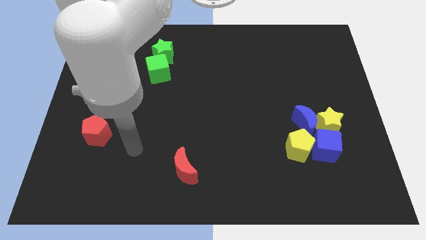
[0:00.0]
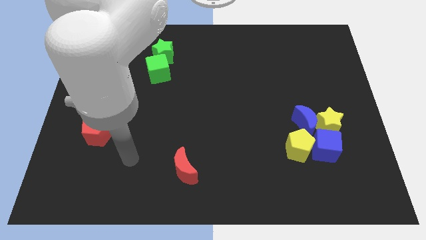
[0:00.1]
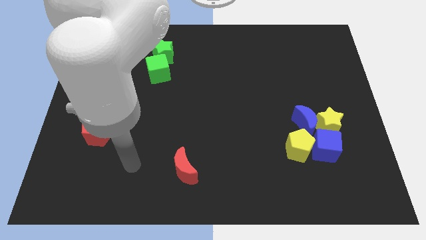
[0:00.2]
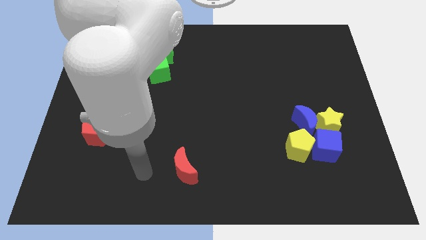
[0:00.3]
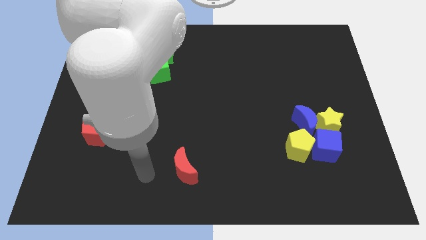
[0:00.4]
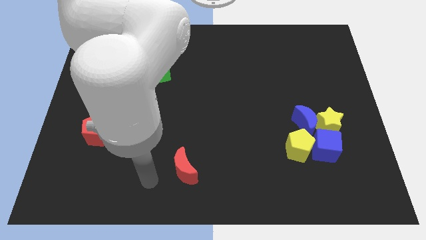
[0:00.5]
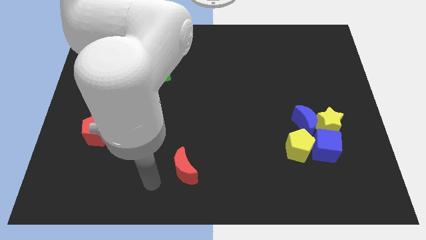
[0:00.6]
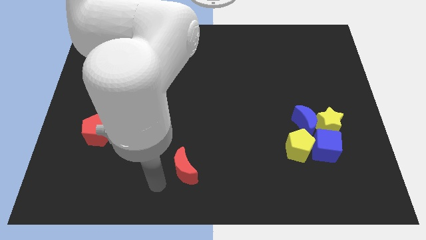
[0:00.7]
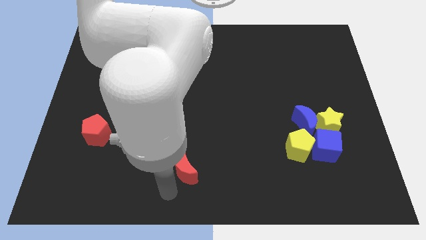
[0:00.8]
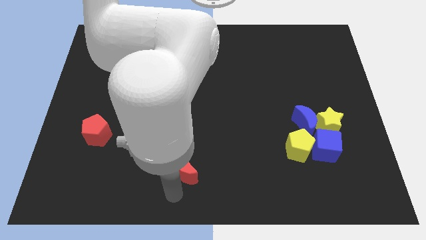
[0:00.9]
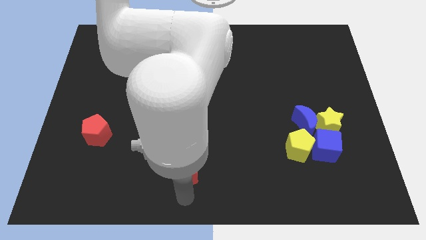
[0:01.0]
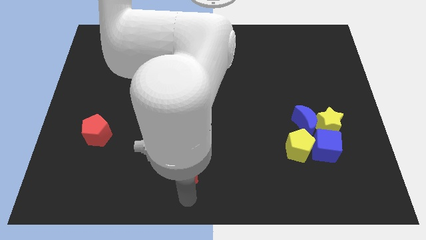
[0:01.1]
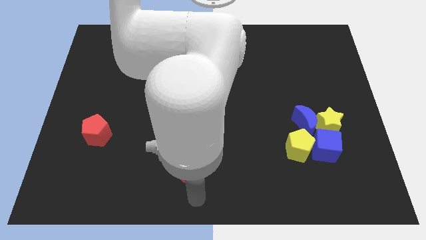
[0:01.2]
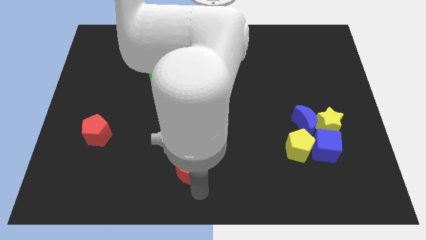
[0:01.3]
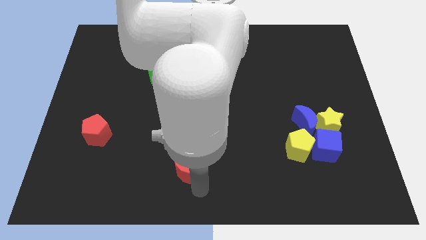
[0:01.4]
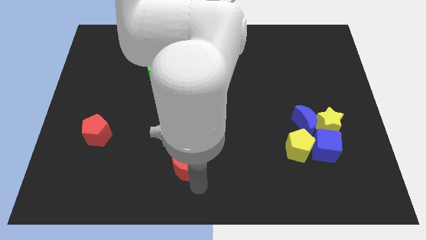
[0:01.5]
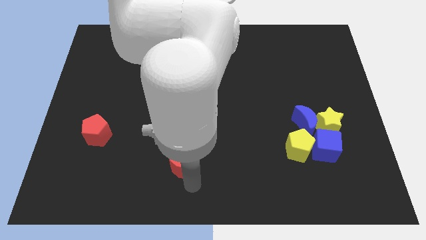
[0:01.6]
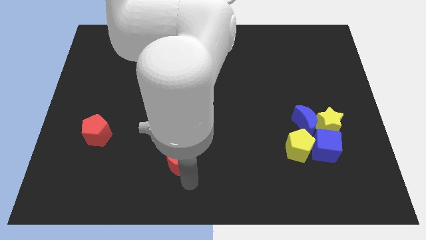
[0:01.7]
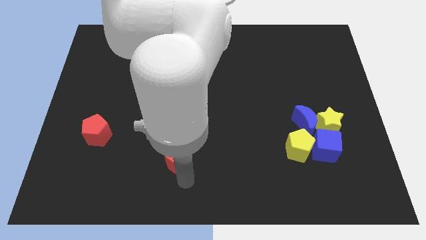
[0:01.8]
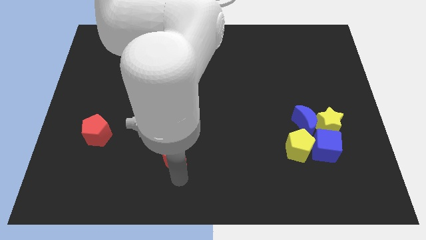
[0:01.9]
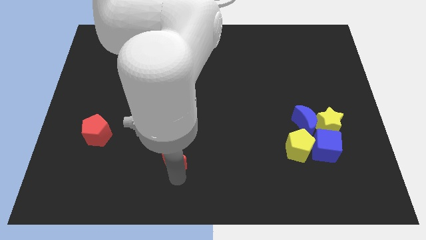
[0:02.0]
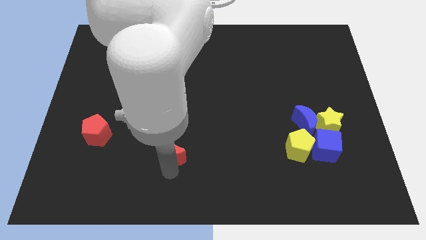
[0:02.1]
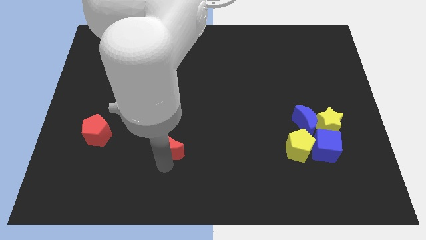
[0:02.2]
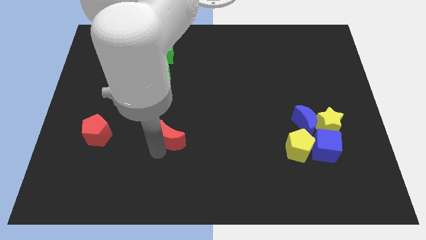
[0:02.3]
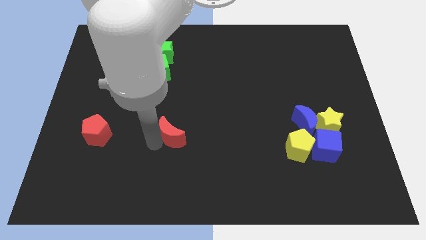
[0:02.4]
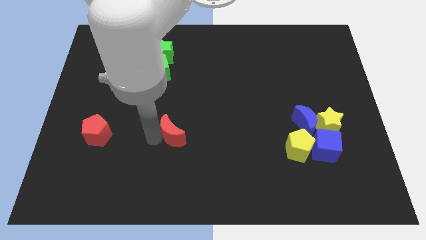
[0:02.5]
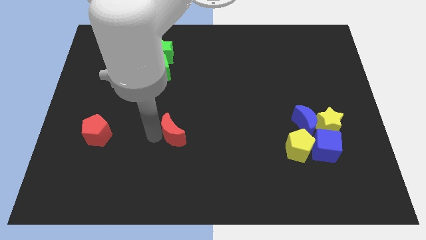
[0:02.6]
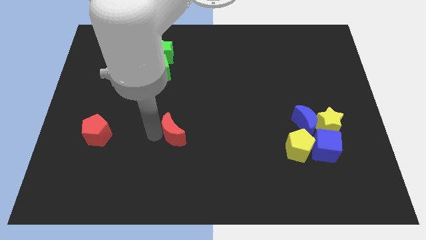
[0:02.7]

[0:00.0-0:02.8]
move the red moon to the right side of the red pentagon

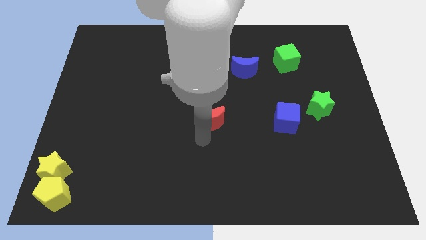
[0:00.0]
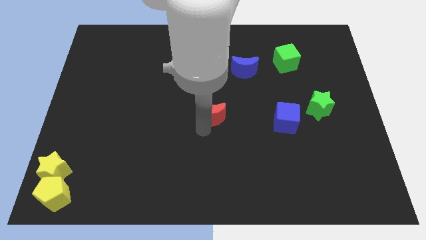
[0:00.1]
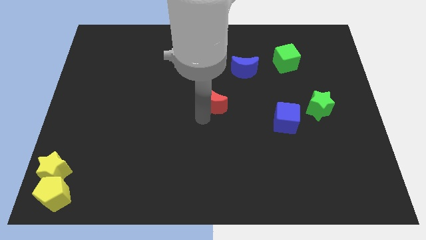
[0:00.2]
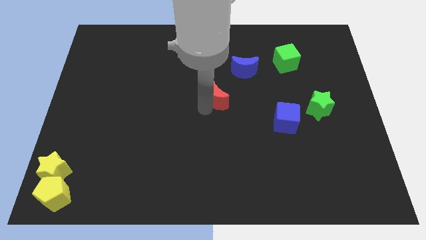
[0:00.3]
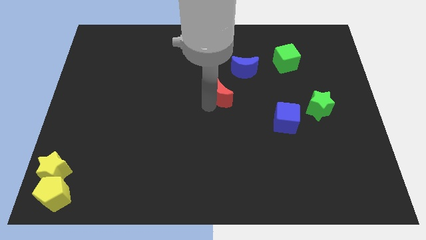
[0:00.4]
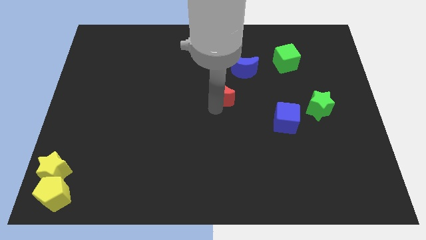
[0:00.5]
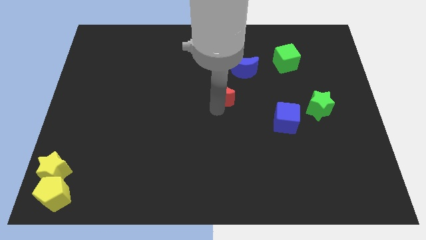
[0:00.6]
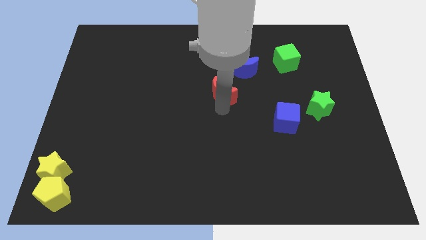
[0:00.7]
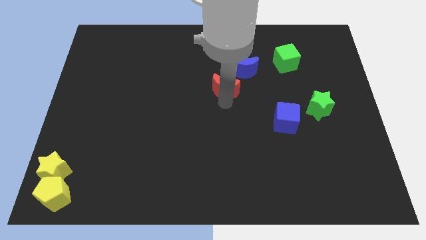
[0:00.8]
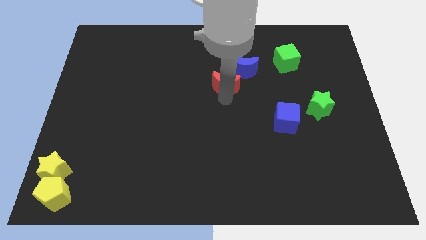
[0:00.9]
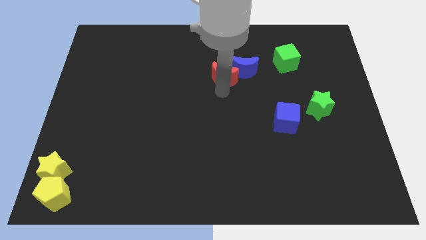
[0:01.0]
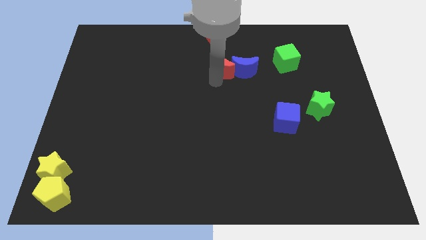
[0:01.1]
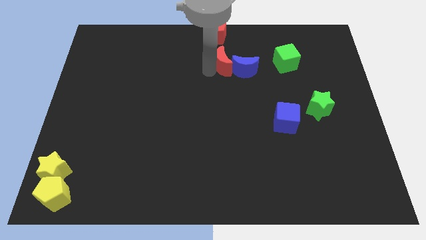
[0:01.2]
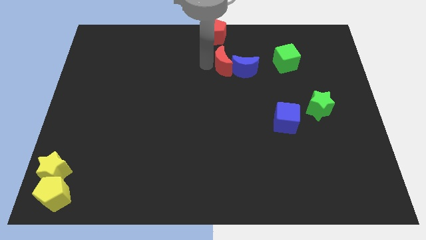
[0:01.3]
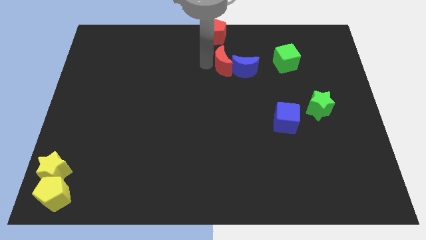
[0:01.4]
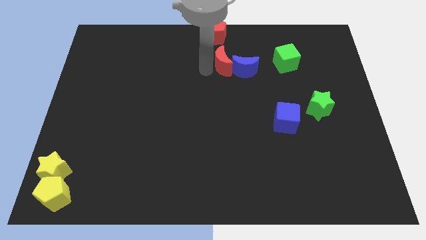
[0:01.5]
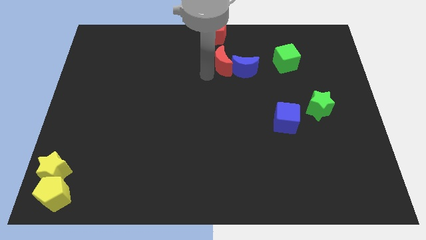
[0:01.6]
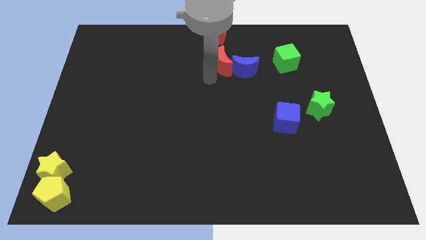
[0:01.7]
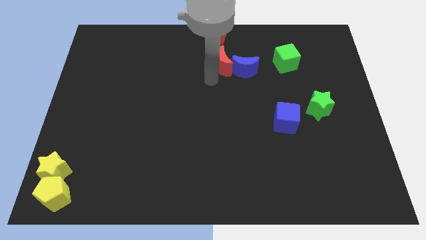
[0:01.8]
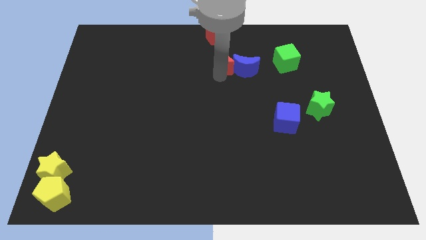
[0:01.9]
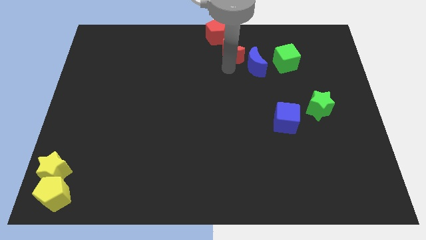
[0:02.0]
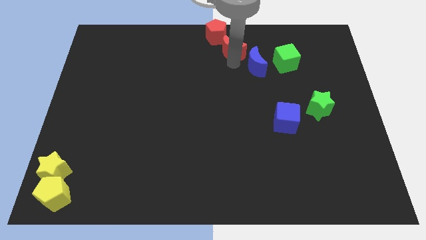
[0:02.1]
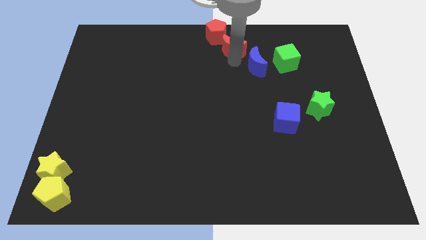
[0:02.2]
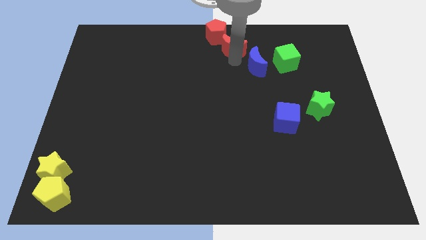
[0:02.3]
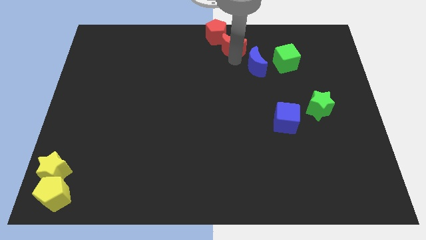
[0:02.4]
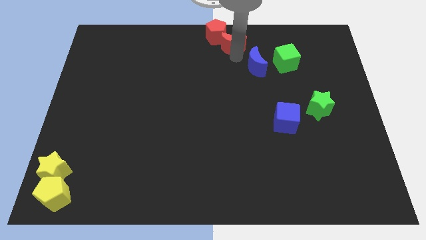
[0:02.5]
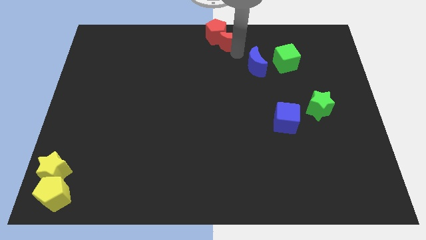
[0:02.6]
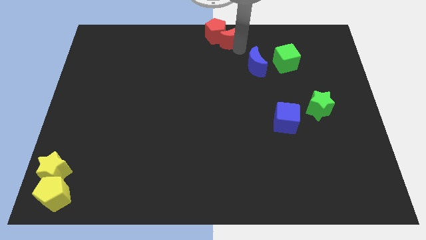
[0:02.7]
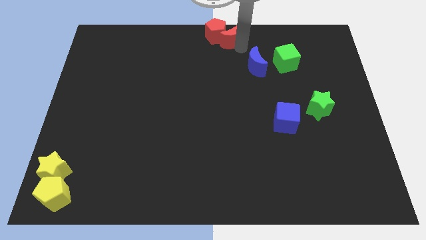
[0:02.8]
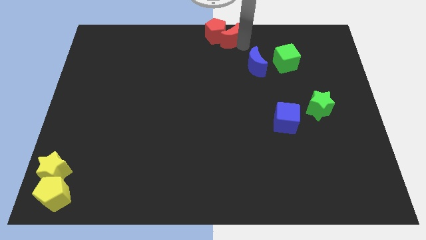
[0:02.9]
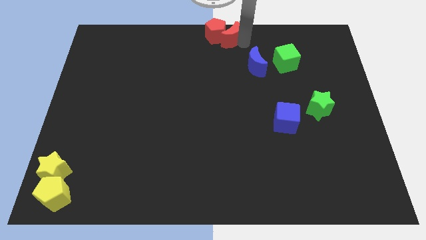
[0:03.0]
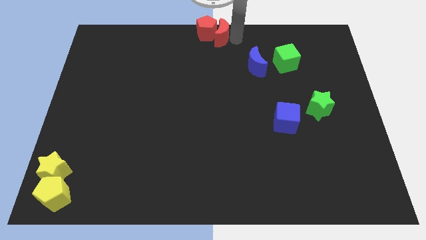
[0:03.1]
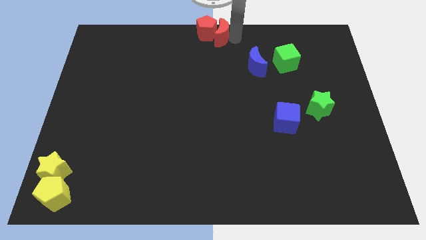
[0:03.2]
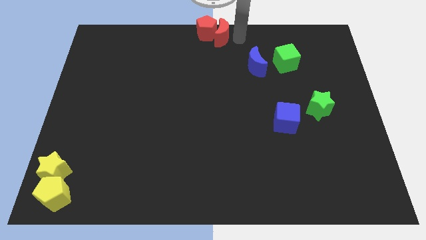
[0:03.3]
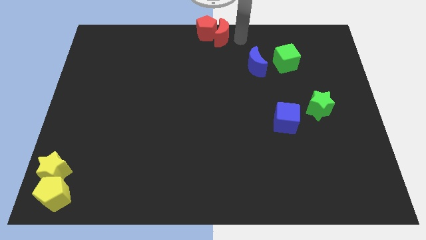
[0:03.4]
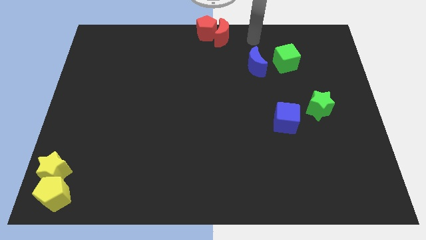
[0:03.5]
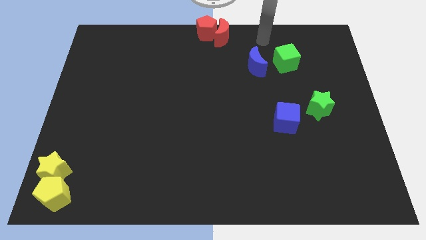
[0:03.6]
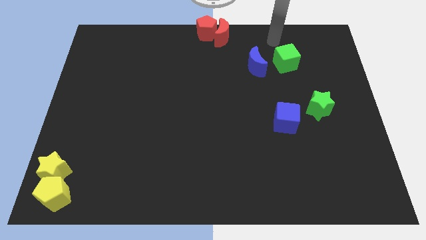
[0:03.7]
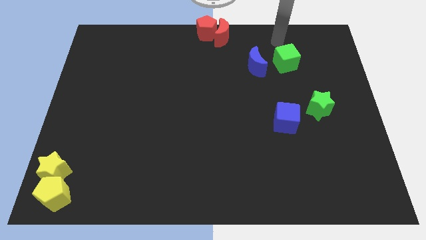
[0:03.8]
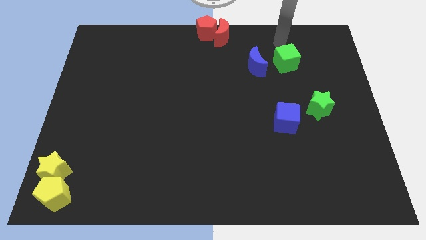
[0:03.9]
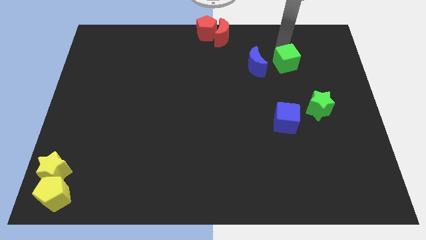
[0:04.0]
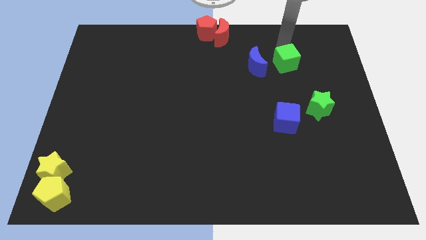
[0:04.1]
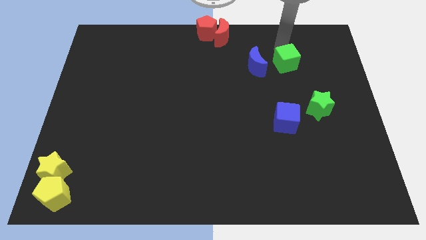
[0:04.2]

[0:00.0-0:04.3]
push the red moon into the red pentagon

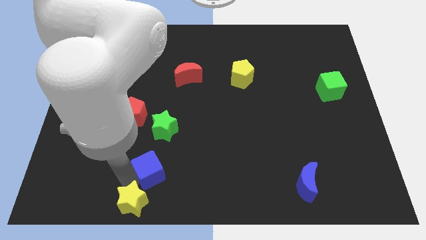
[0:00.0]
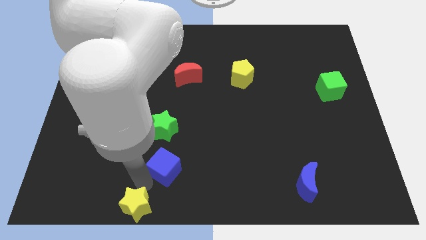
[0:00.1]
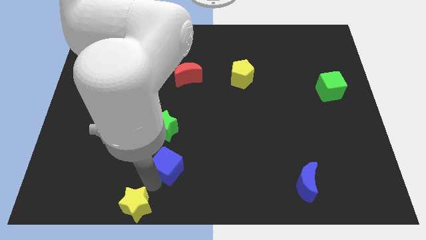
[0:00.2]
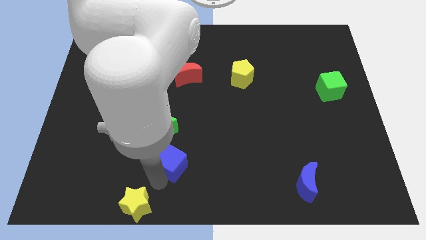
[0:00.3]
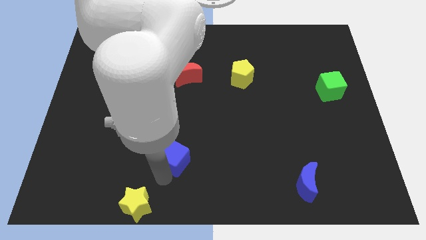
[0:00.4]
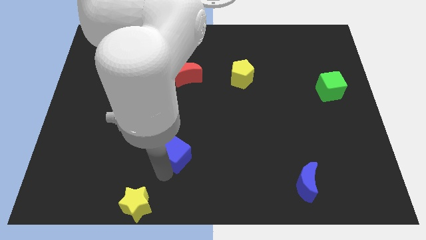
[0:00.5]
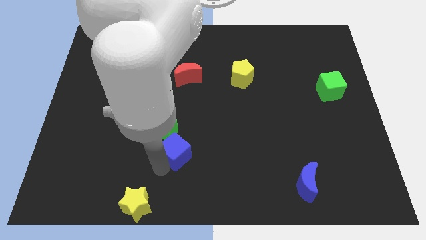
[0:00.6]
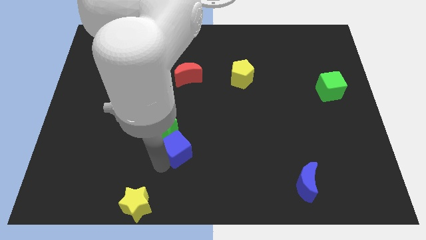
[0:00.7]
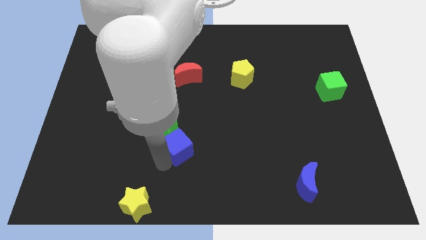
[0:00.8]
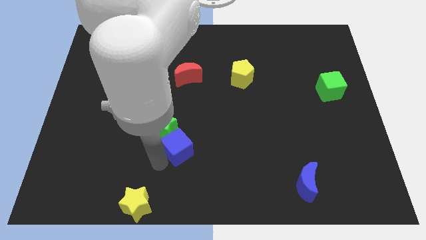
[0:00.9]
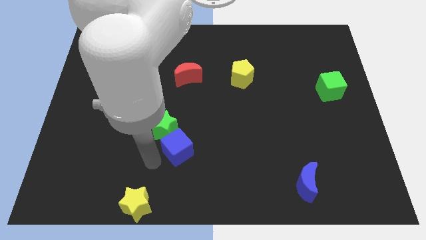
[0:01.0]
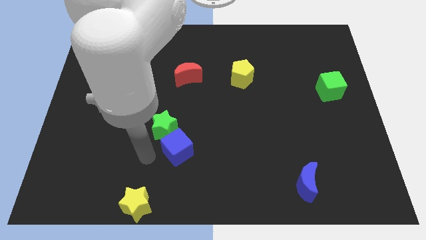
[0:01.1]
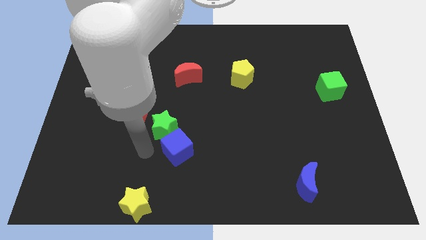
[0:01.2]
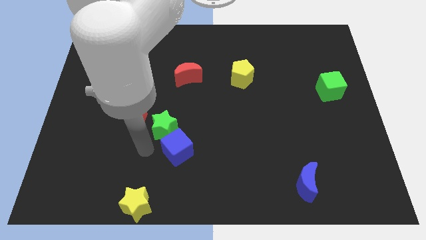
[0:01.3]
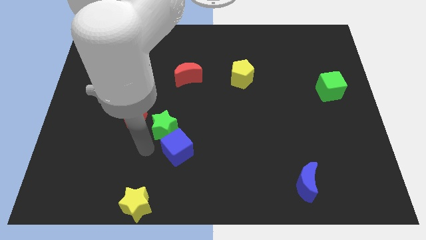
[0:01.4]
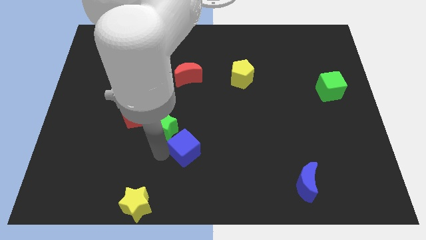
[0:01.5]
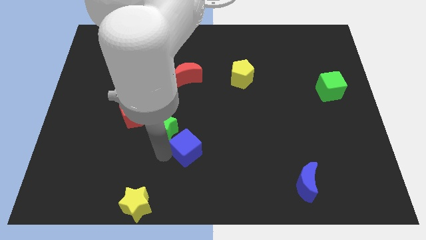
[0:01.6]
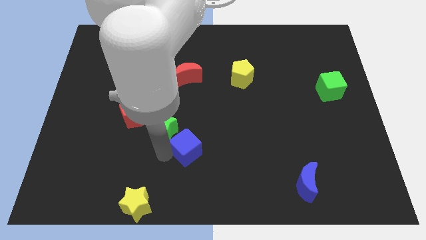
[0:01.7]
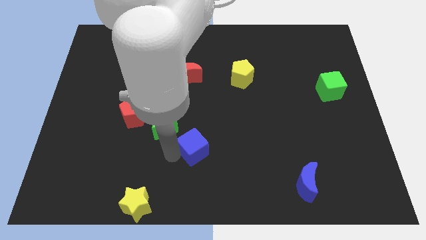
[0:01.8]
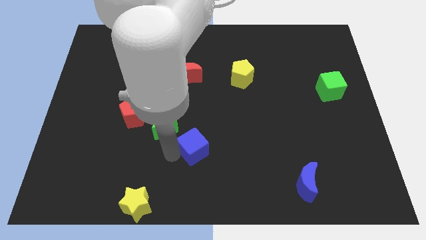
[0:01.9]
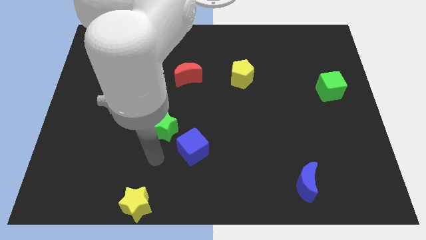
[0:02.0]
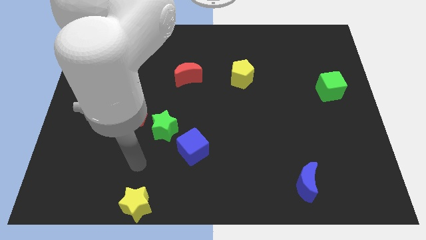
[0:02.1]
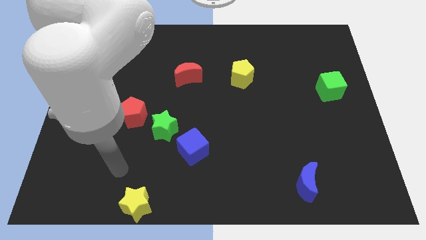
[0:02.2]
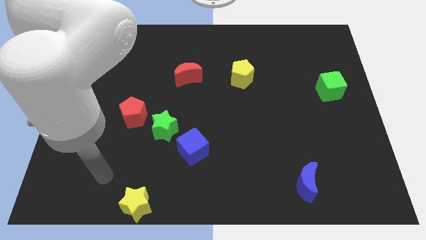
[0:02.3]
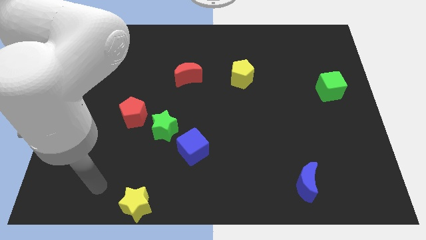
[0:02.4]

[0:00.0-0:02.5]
move the blue cube to the bottom right of the green star
